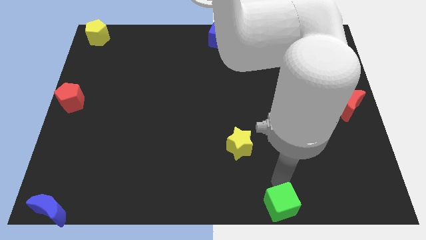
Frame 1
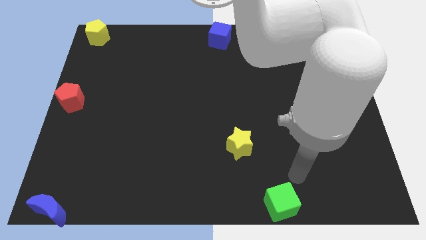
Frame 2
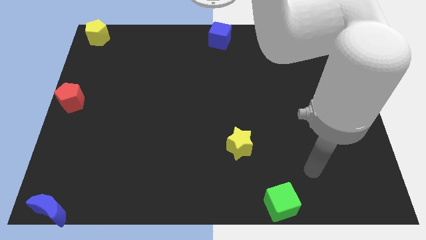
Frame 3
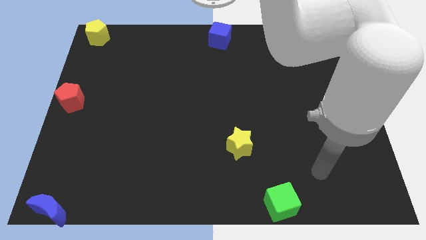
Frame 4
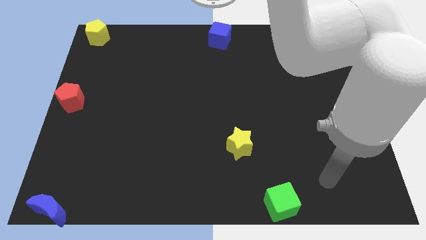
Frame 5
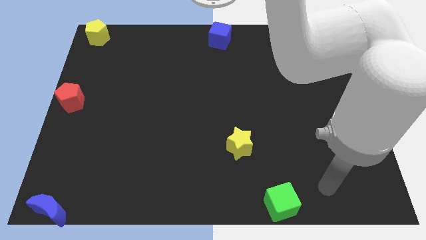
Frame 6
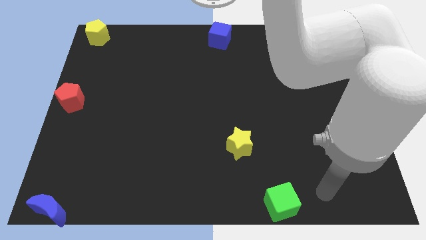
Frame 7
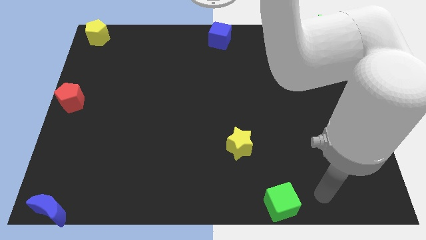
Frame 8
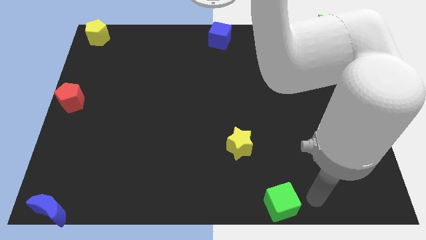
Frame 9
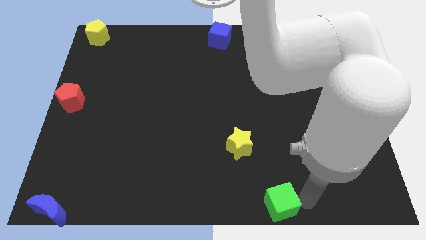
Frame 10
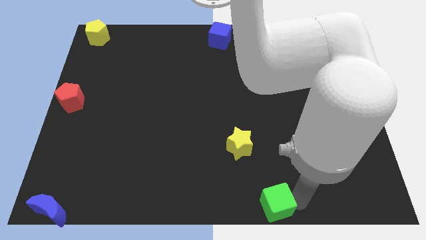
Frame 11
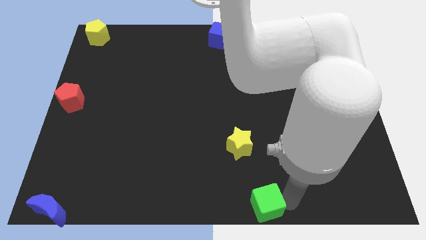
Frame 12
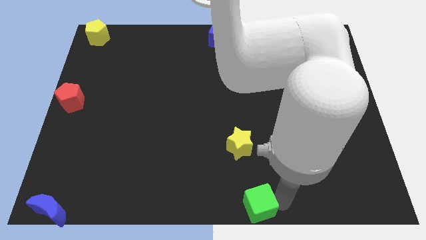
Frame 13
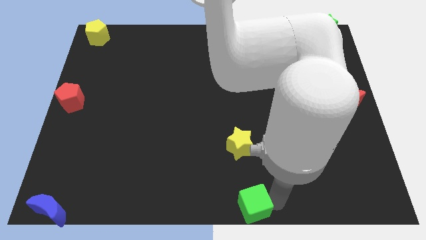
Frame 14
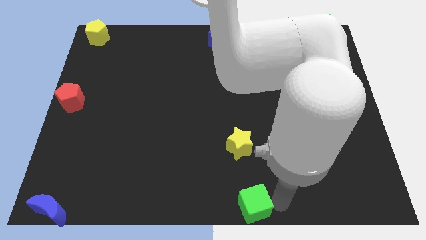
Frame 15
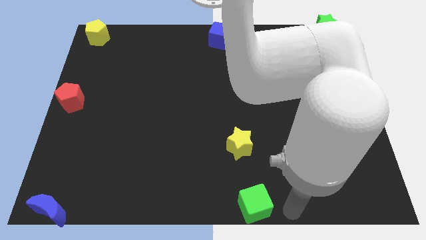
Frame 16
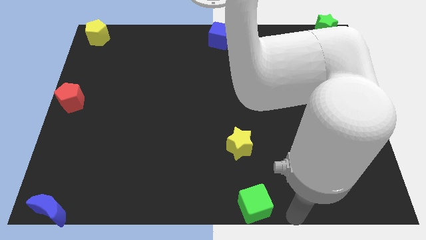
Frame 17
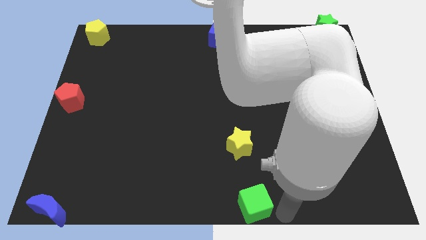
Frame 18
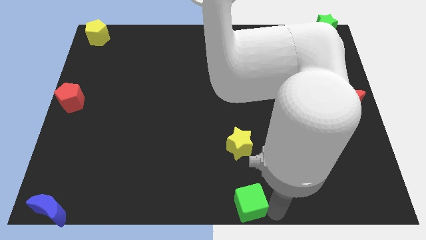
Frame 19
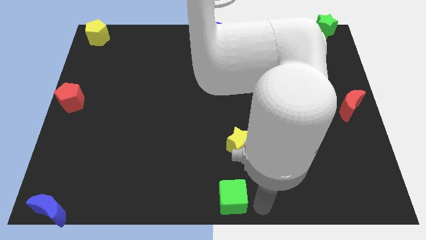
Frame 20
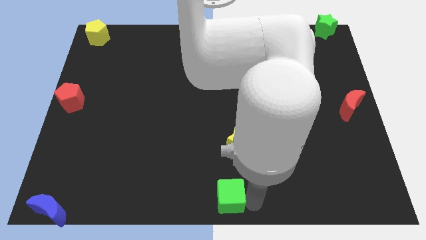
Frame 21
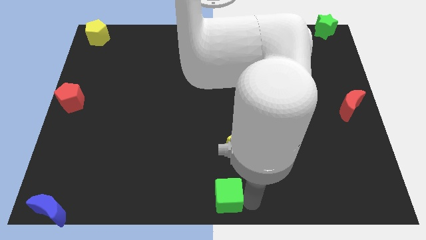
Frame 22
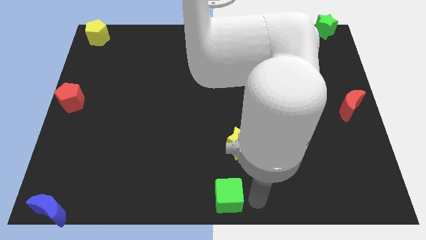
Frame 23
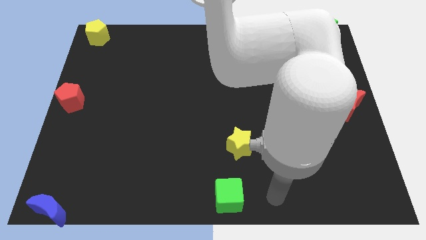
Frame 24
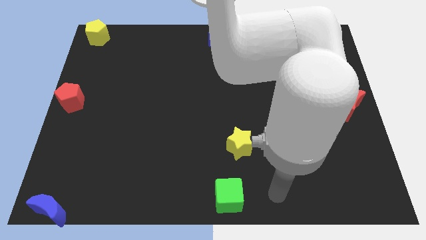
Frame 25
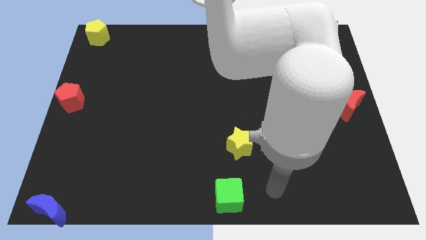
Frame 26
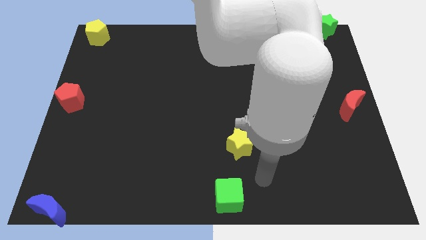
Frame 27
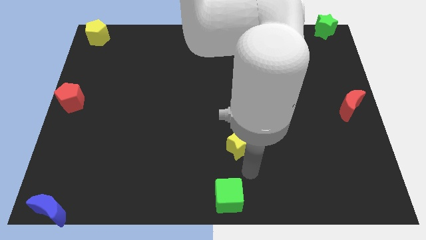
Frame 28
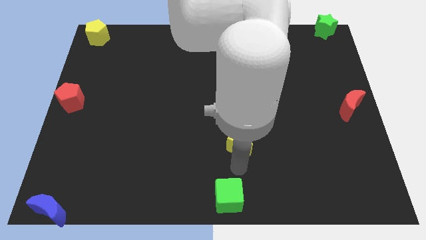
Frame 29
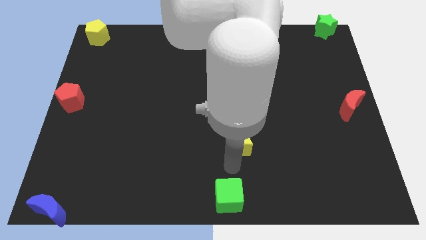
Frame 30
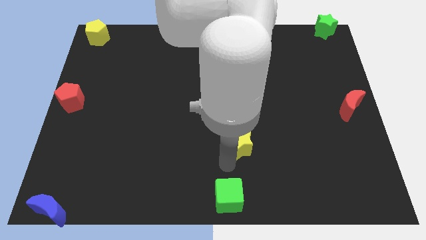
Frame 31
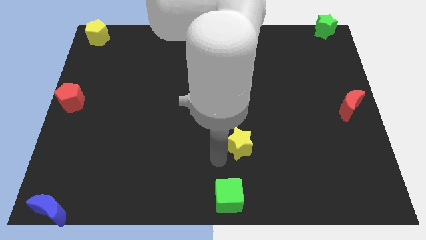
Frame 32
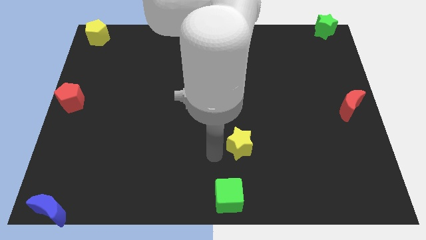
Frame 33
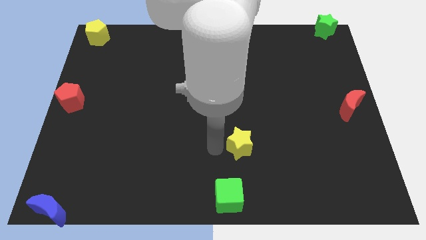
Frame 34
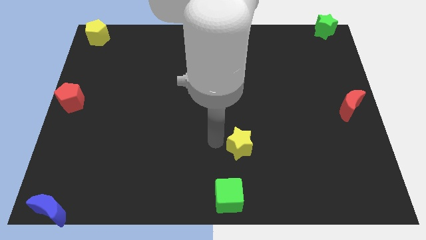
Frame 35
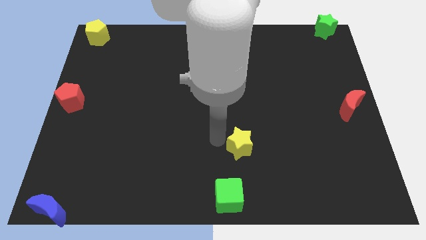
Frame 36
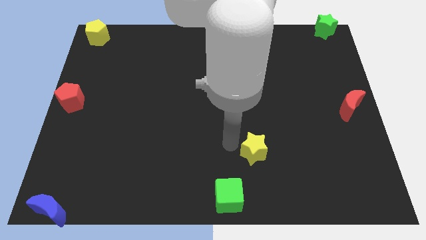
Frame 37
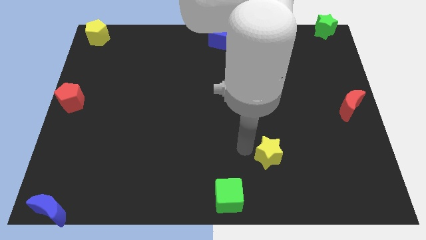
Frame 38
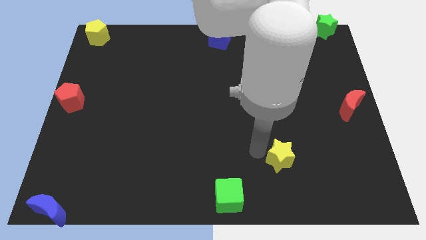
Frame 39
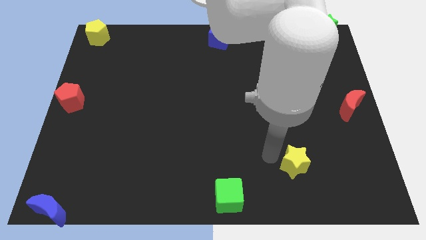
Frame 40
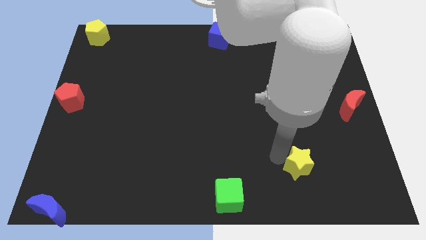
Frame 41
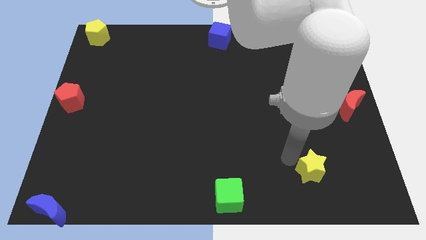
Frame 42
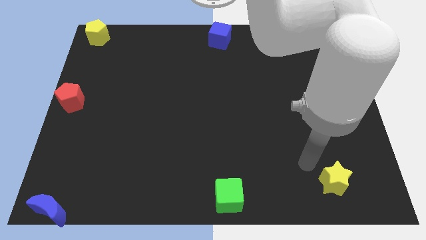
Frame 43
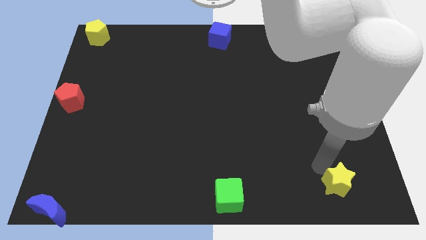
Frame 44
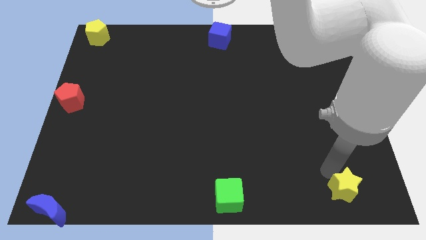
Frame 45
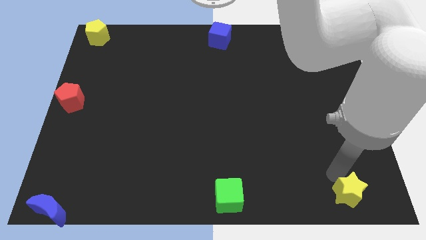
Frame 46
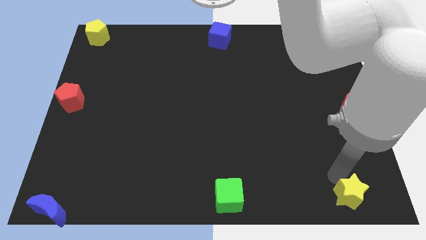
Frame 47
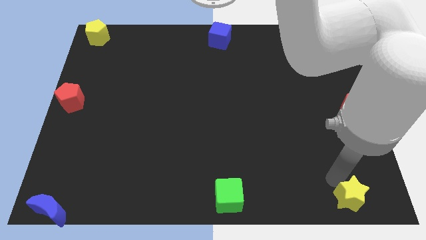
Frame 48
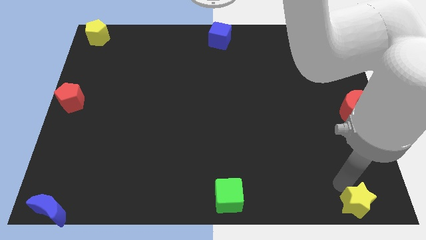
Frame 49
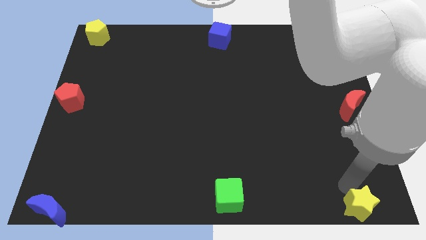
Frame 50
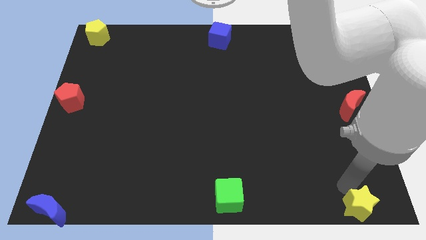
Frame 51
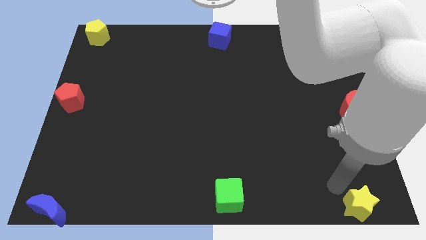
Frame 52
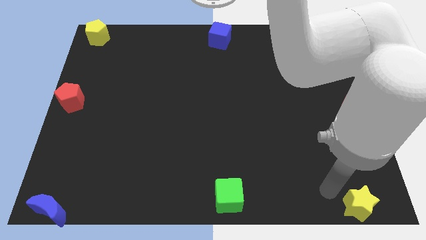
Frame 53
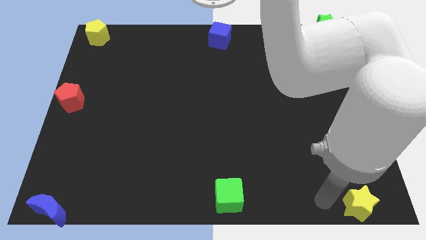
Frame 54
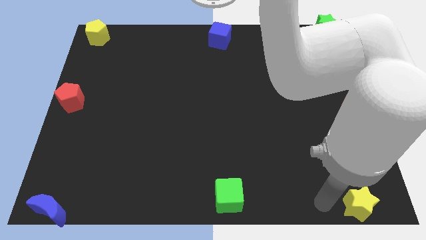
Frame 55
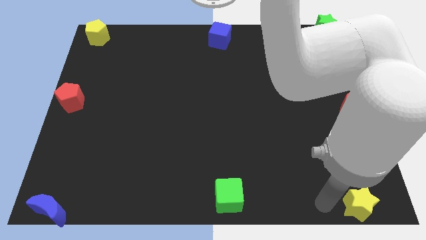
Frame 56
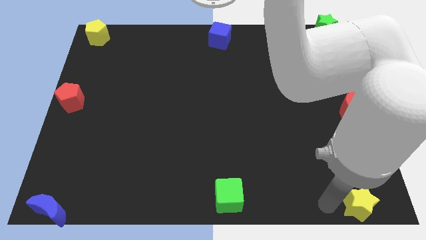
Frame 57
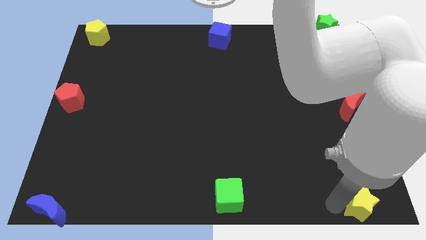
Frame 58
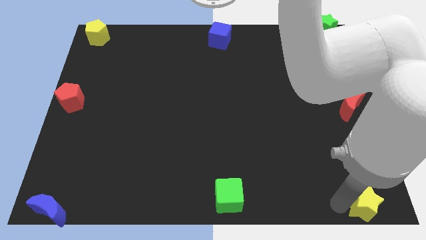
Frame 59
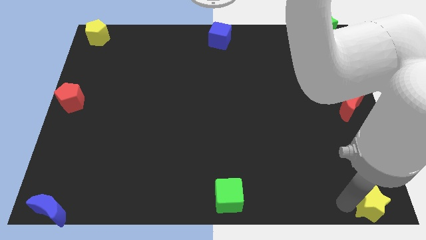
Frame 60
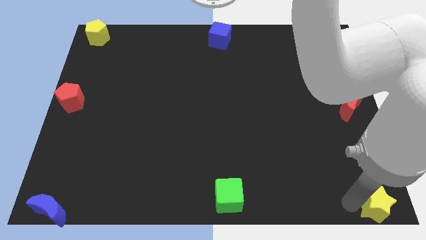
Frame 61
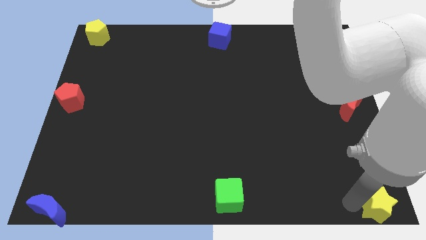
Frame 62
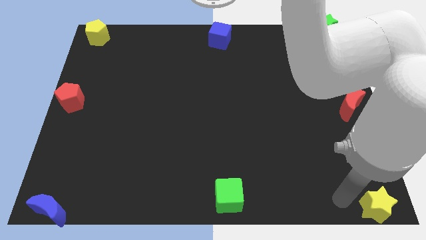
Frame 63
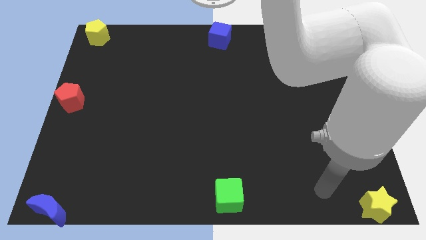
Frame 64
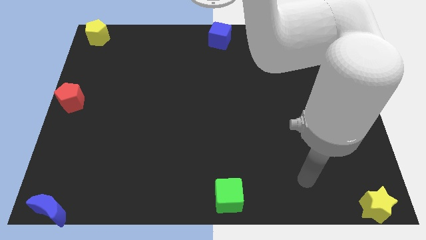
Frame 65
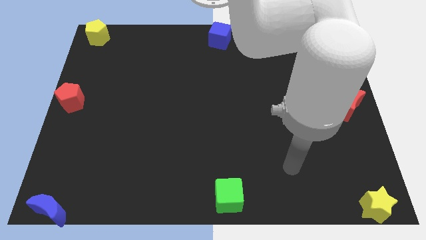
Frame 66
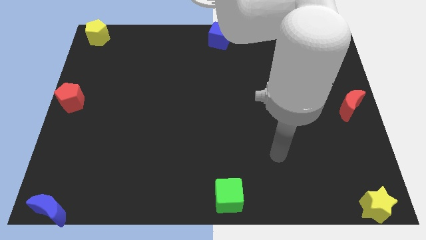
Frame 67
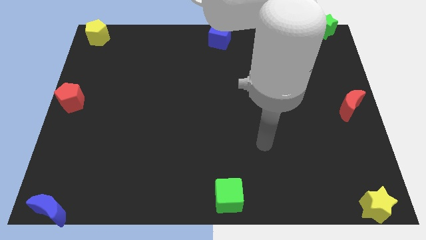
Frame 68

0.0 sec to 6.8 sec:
place yellow star to the right bottom corner of the board

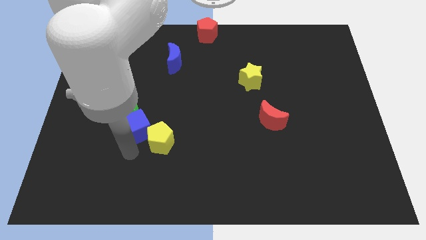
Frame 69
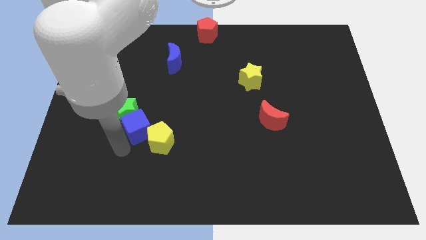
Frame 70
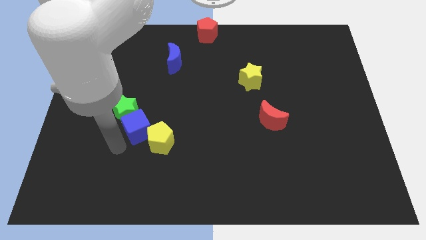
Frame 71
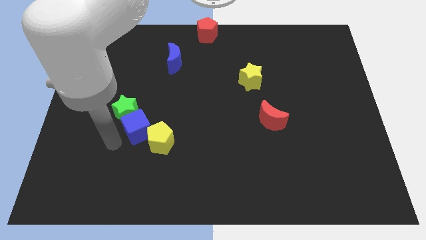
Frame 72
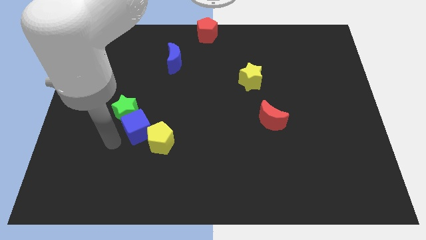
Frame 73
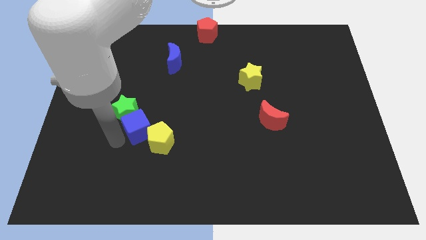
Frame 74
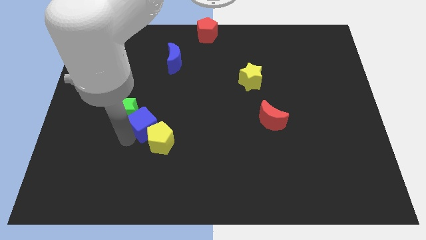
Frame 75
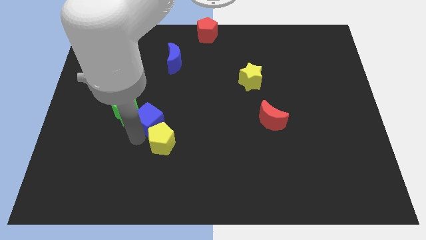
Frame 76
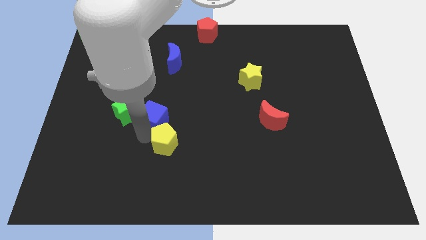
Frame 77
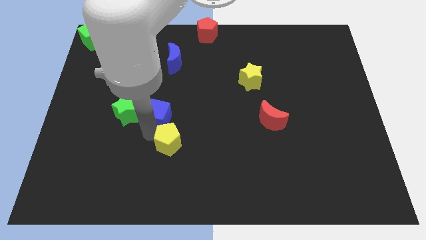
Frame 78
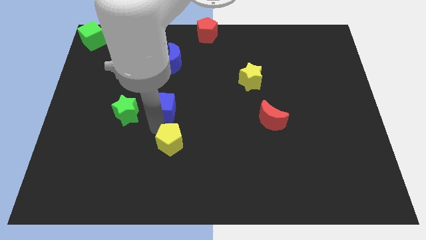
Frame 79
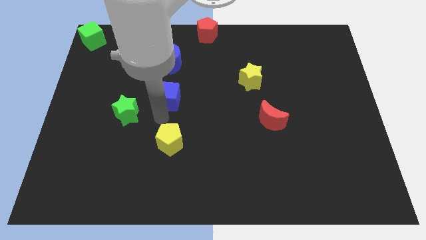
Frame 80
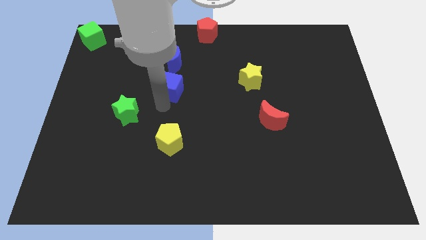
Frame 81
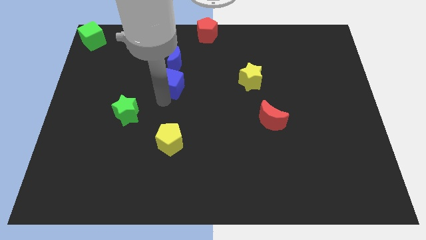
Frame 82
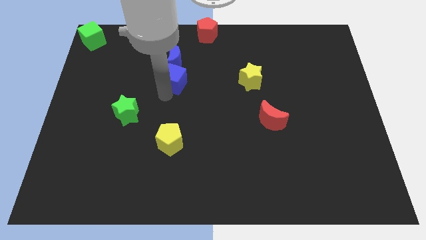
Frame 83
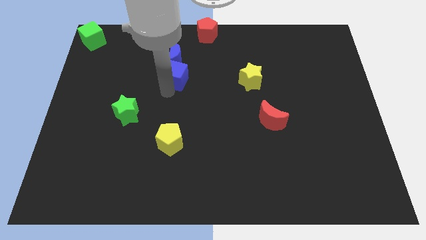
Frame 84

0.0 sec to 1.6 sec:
move the blue cube in to blue crescent

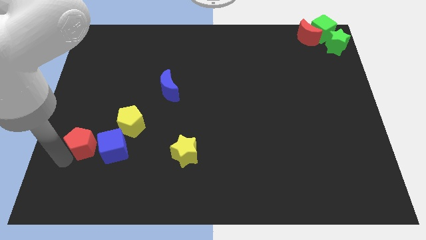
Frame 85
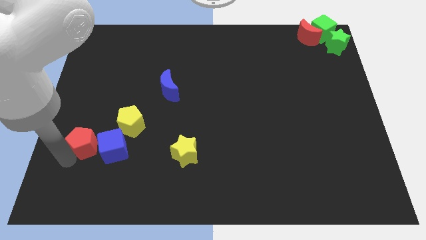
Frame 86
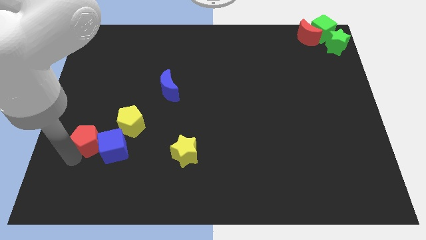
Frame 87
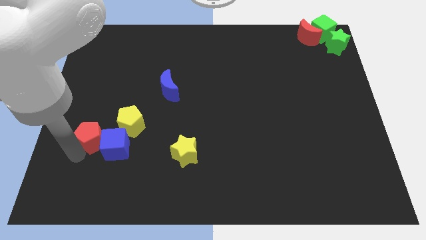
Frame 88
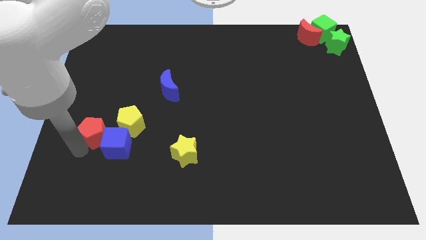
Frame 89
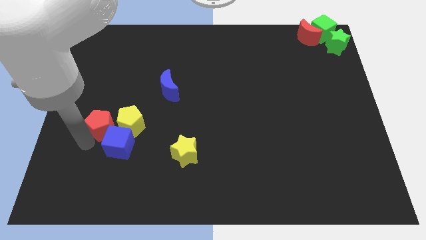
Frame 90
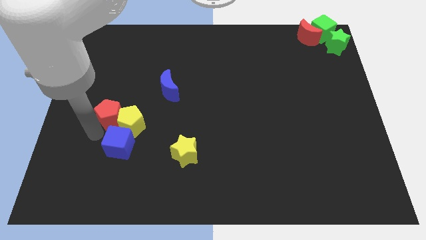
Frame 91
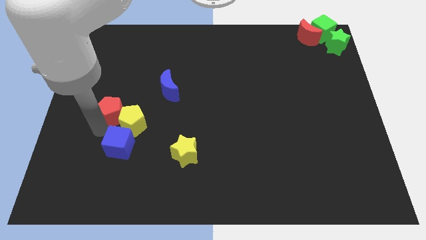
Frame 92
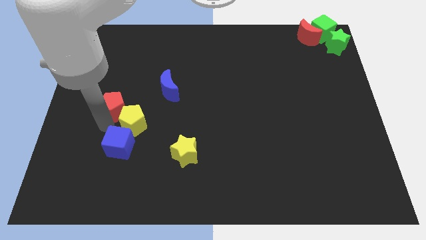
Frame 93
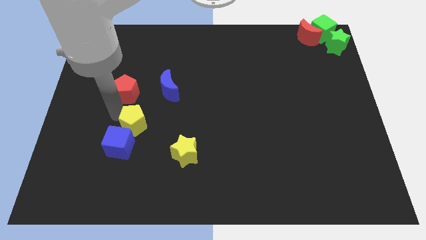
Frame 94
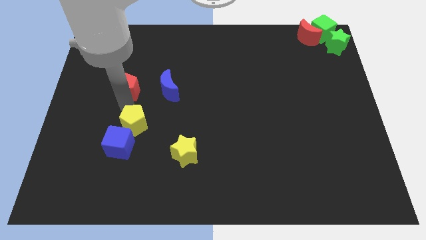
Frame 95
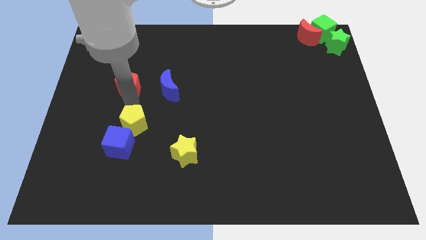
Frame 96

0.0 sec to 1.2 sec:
place the red pentagon above the yellow pentagon
